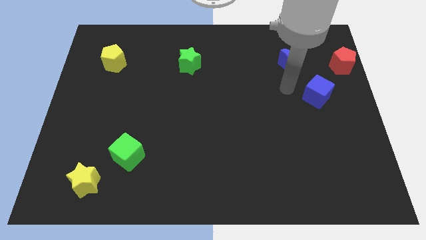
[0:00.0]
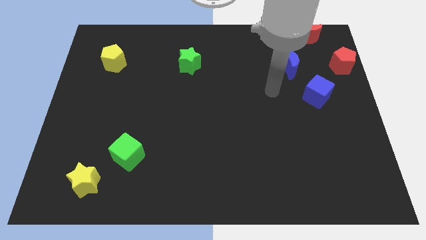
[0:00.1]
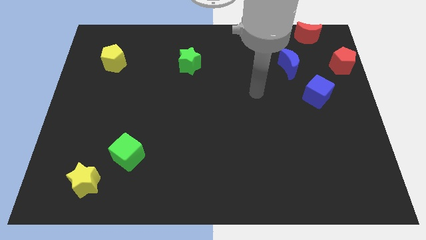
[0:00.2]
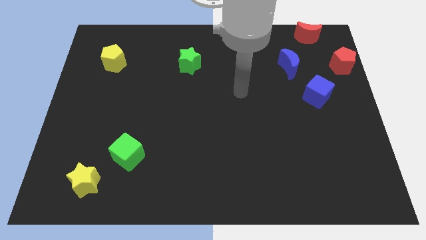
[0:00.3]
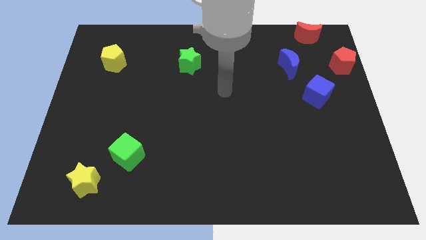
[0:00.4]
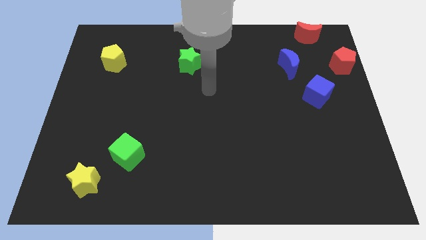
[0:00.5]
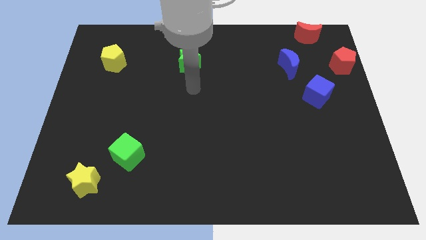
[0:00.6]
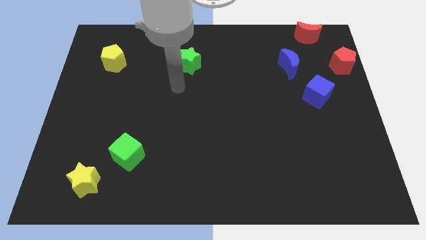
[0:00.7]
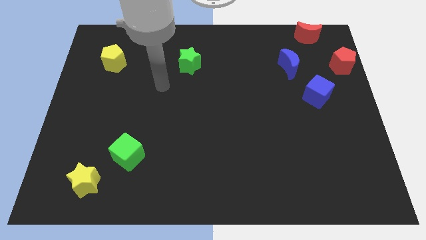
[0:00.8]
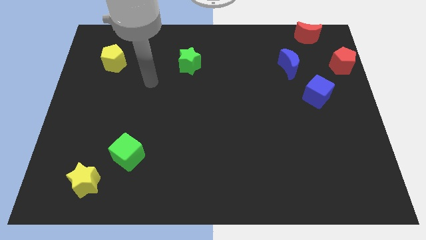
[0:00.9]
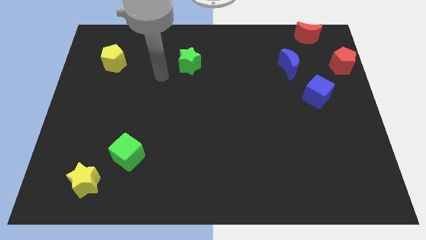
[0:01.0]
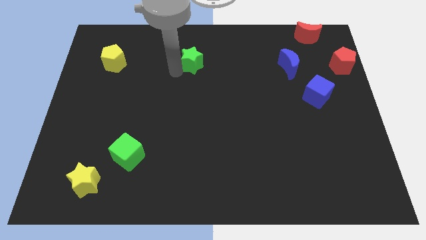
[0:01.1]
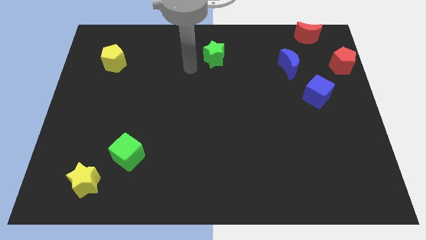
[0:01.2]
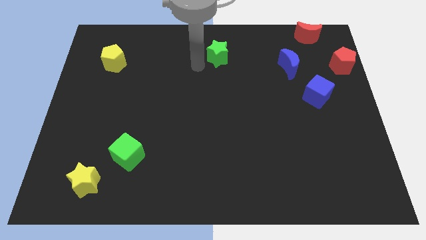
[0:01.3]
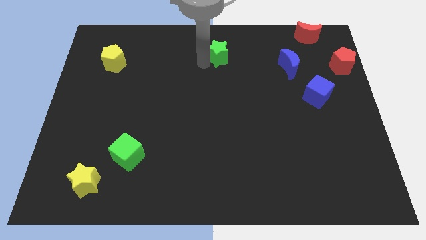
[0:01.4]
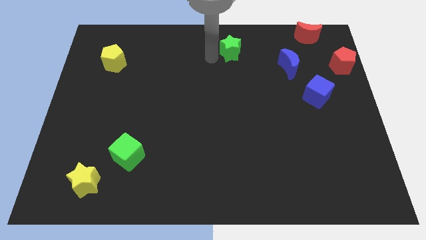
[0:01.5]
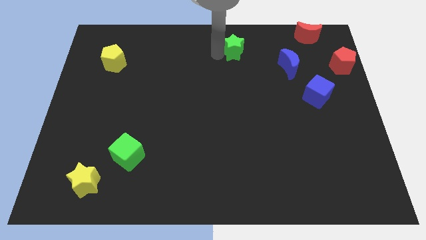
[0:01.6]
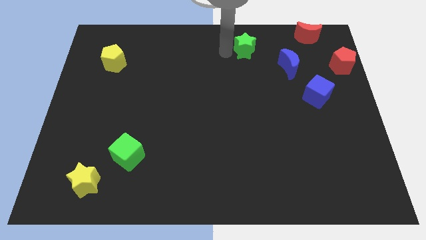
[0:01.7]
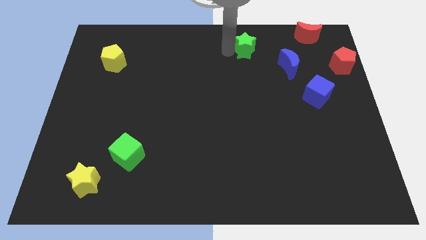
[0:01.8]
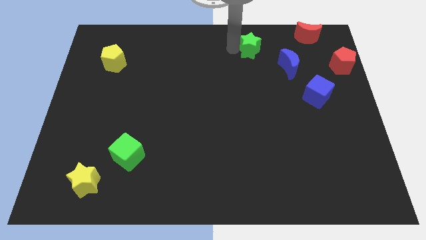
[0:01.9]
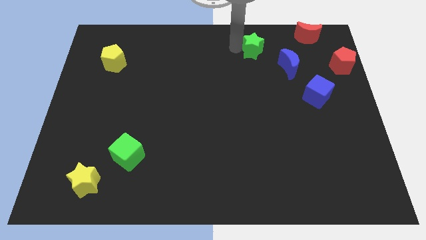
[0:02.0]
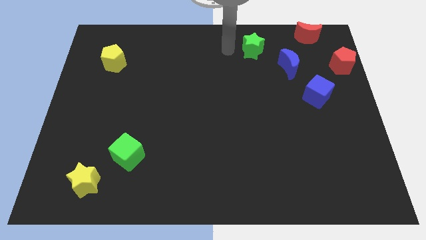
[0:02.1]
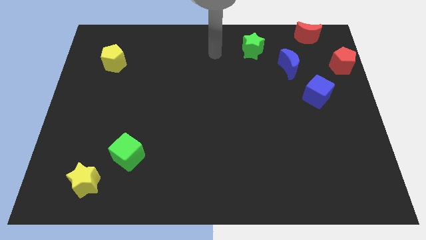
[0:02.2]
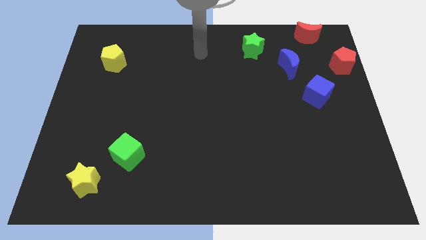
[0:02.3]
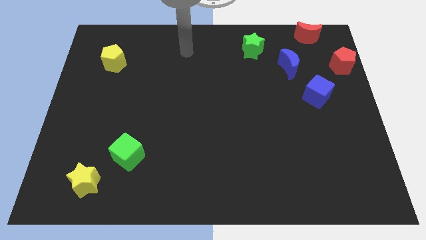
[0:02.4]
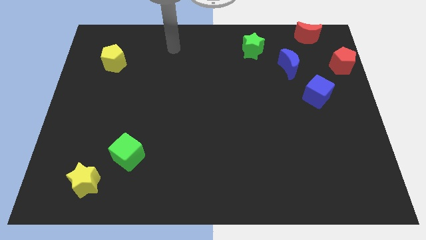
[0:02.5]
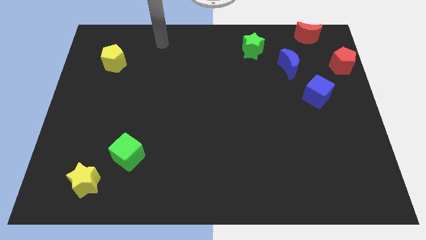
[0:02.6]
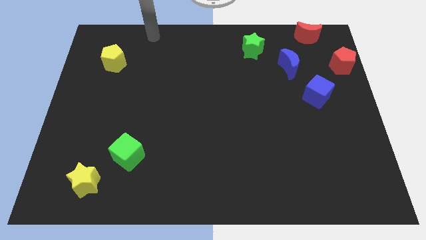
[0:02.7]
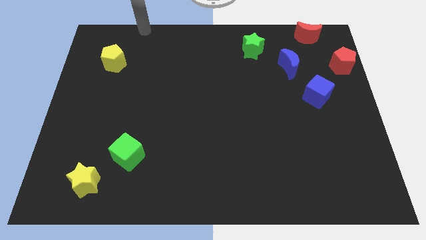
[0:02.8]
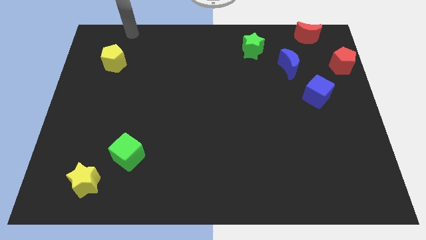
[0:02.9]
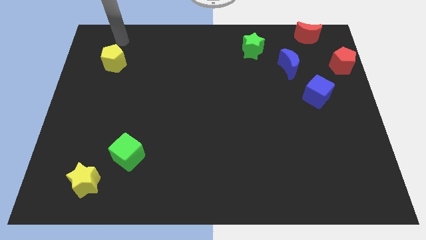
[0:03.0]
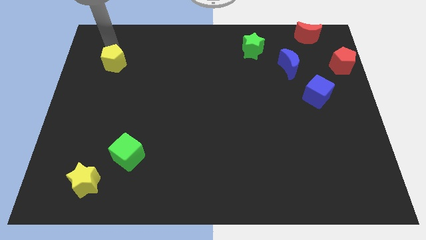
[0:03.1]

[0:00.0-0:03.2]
push the green star to the right side of the board

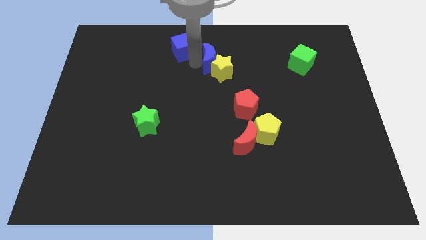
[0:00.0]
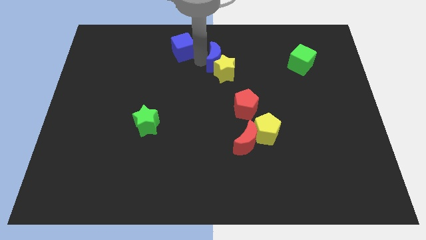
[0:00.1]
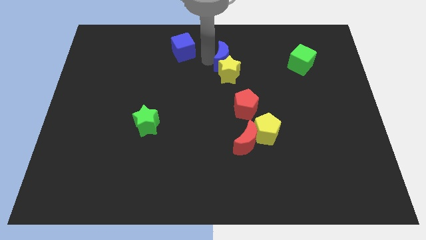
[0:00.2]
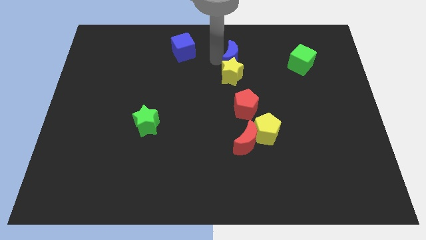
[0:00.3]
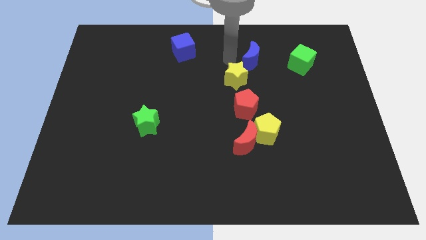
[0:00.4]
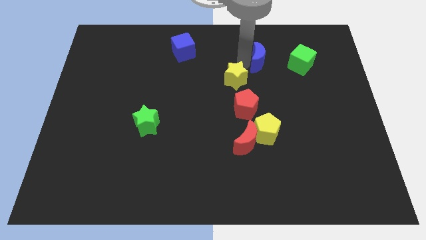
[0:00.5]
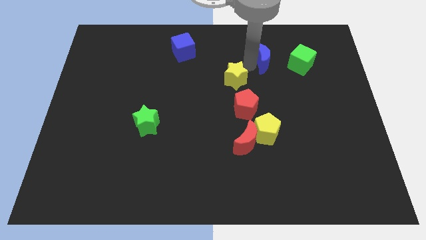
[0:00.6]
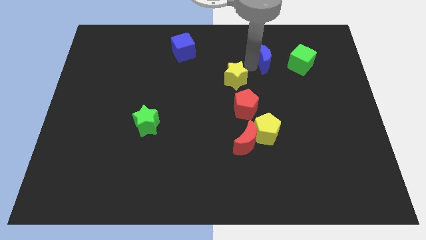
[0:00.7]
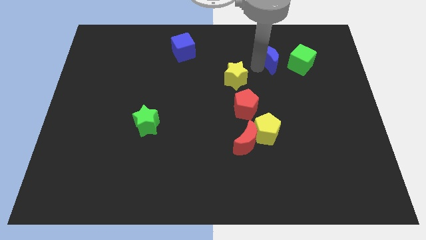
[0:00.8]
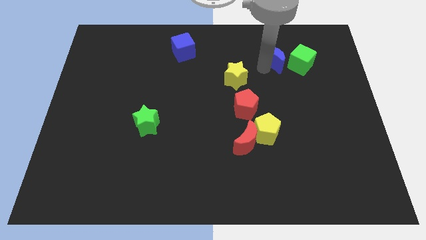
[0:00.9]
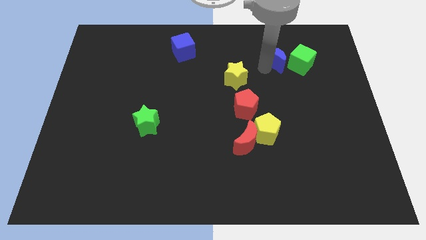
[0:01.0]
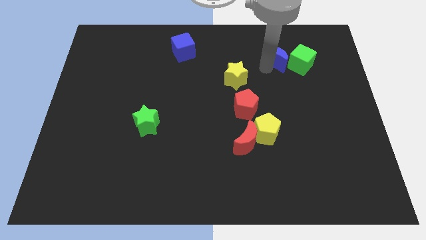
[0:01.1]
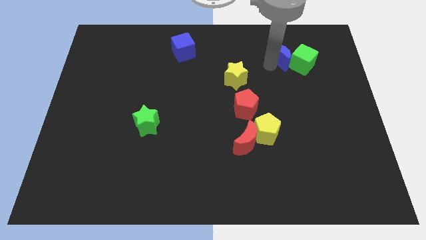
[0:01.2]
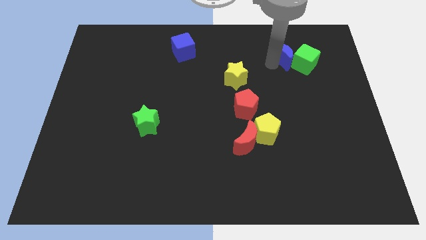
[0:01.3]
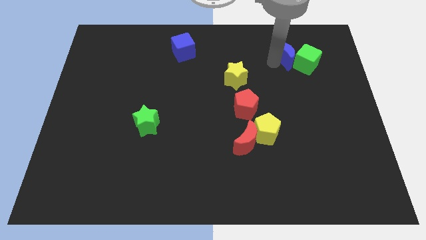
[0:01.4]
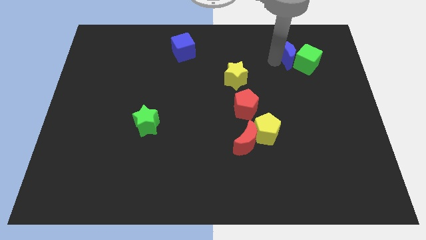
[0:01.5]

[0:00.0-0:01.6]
push the blue moon into green cube

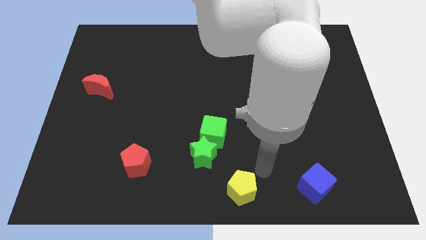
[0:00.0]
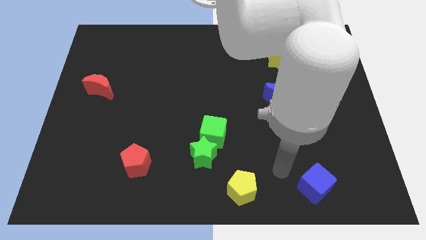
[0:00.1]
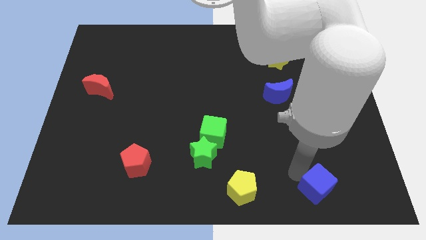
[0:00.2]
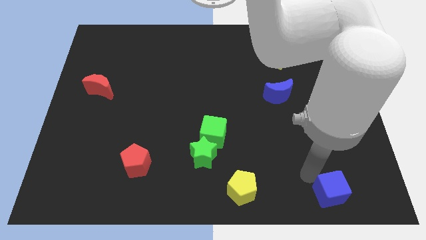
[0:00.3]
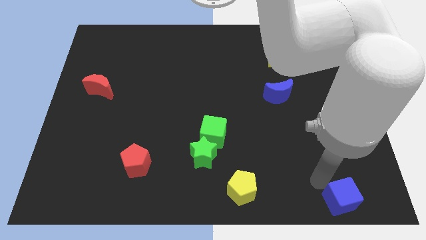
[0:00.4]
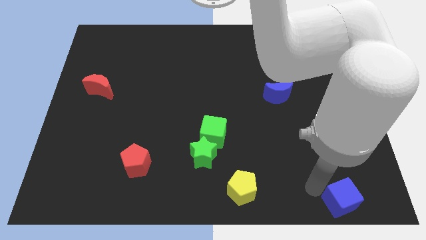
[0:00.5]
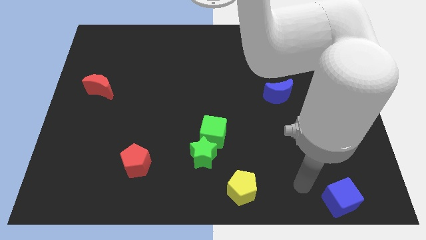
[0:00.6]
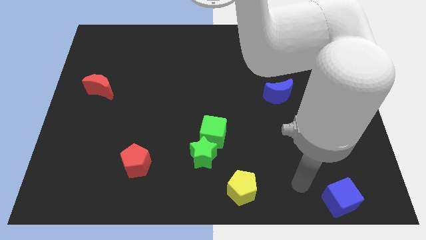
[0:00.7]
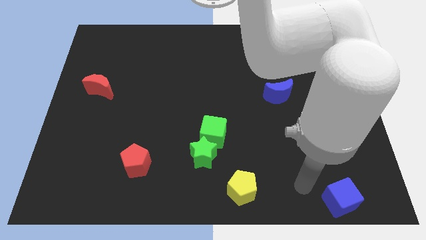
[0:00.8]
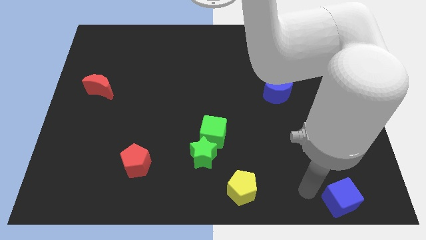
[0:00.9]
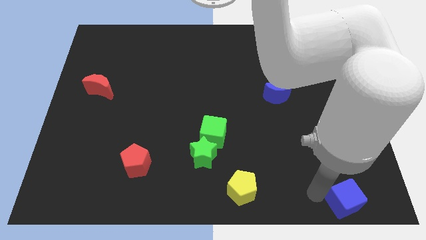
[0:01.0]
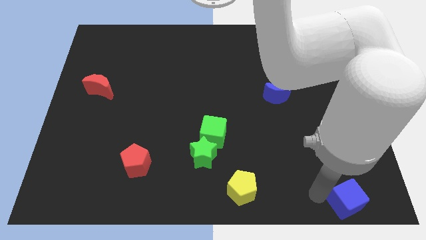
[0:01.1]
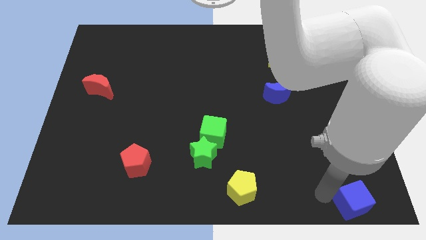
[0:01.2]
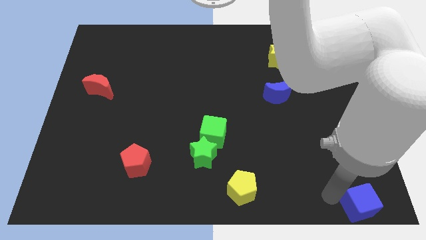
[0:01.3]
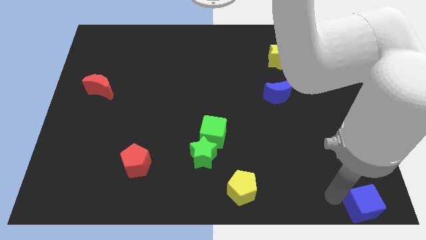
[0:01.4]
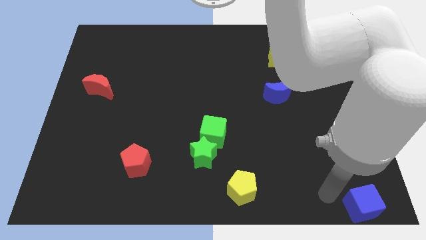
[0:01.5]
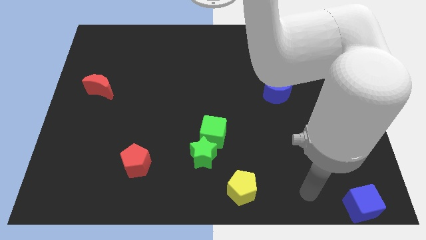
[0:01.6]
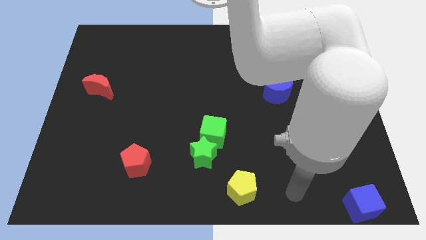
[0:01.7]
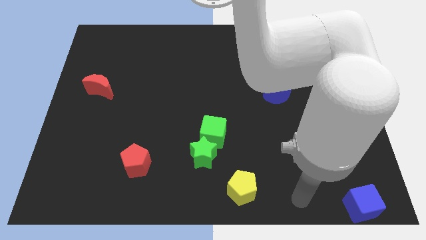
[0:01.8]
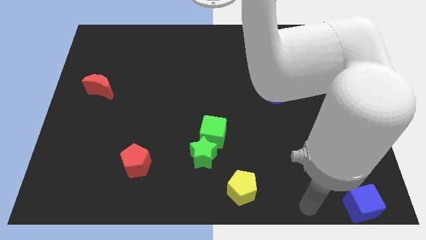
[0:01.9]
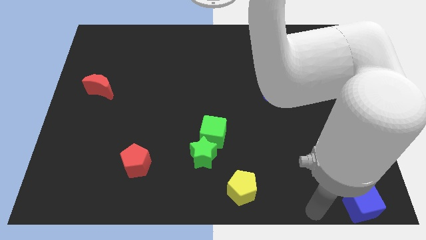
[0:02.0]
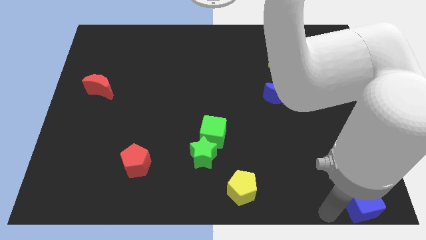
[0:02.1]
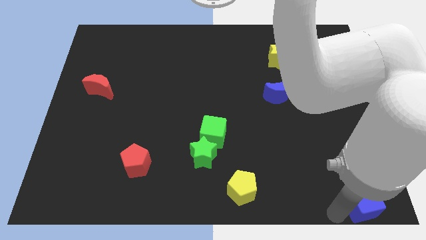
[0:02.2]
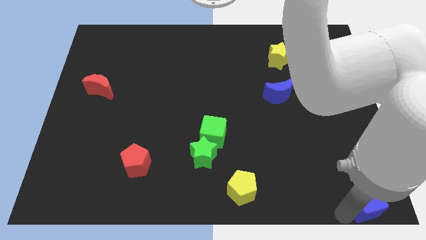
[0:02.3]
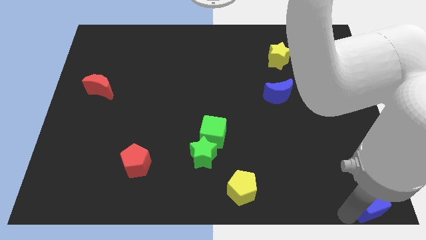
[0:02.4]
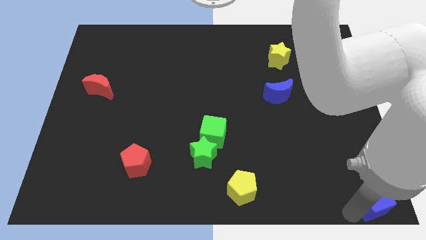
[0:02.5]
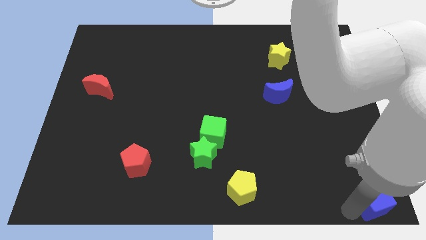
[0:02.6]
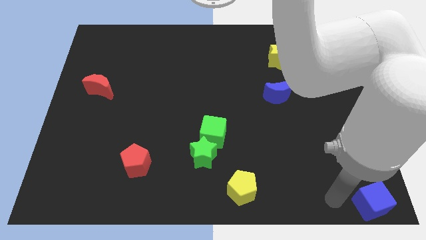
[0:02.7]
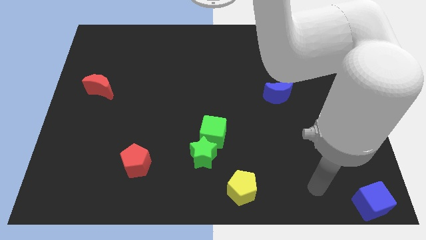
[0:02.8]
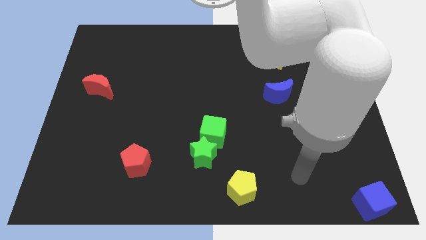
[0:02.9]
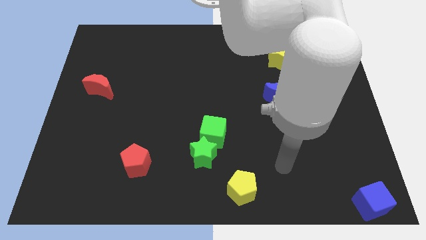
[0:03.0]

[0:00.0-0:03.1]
push the blue cube slightly towards the bottom right corner of the board

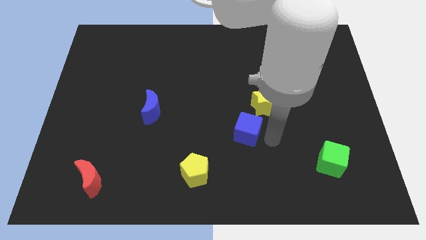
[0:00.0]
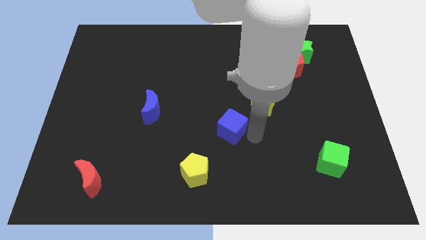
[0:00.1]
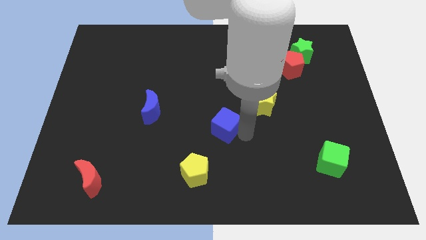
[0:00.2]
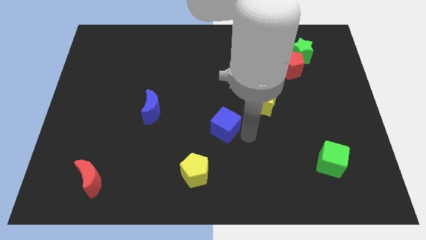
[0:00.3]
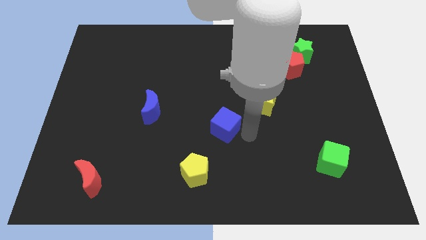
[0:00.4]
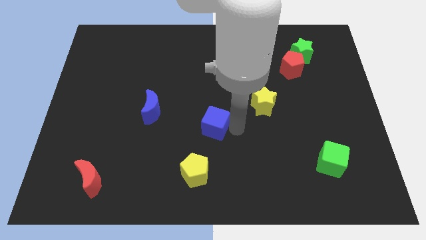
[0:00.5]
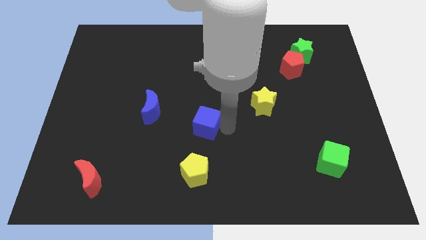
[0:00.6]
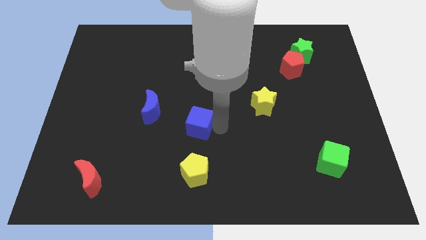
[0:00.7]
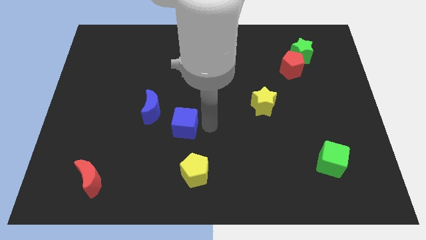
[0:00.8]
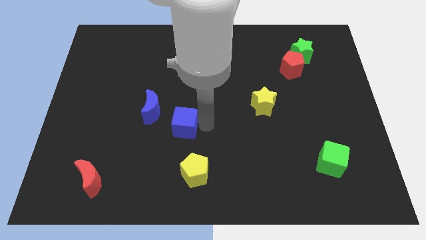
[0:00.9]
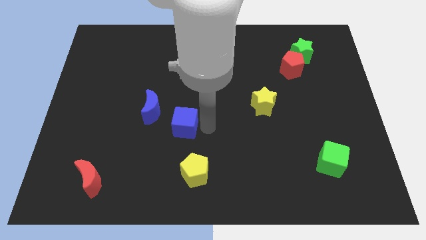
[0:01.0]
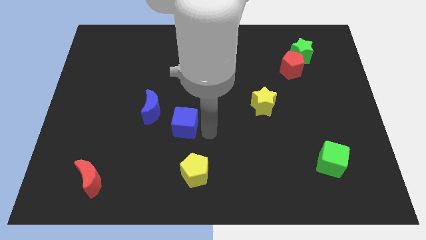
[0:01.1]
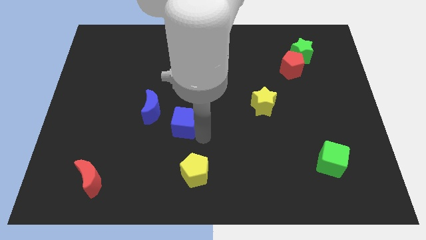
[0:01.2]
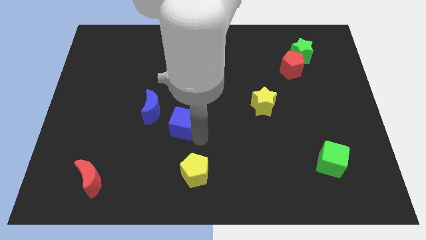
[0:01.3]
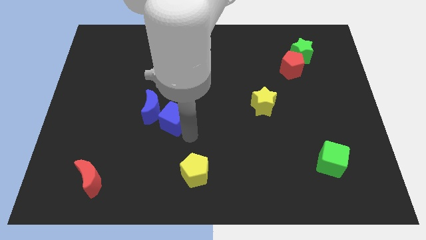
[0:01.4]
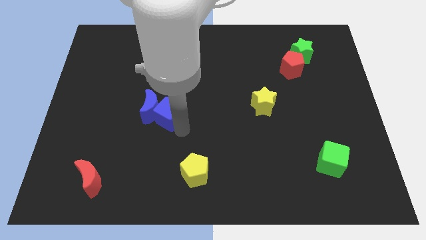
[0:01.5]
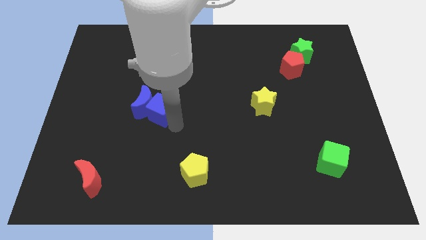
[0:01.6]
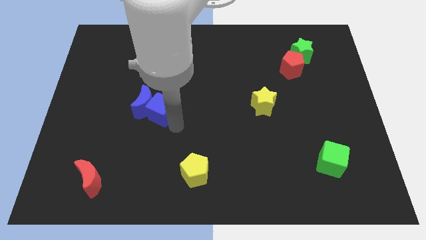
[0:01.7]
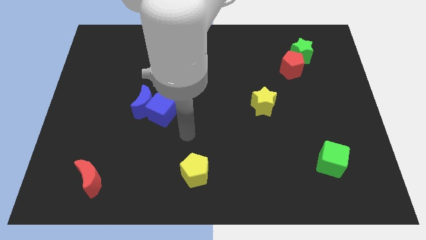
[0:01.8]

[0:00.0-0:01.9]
place the blue cube to the bottom right side of the blue crescent
